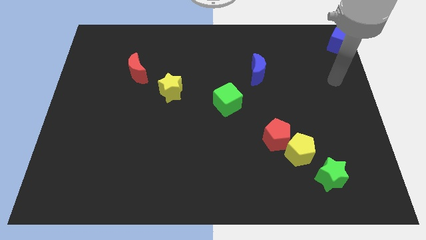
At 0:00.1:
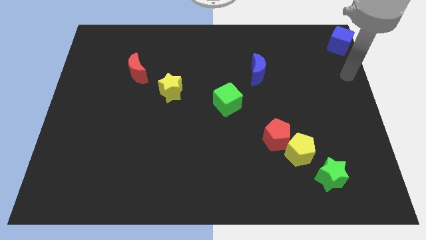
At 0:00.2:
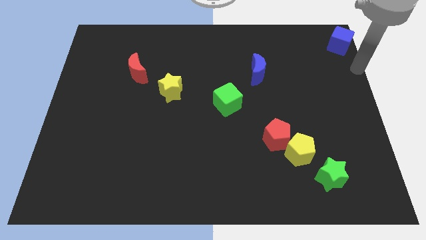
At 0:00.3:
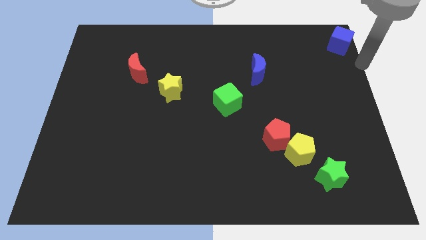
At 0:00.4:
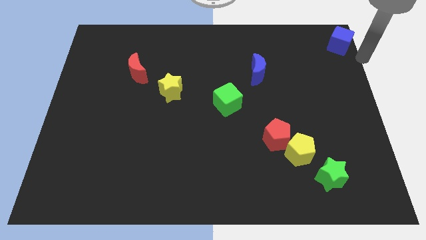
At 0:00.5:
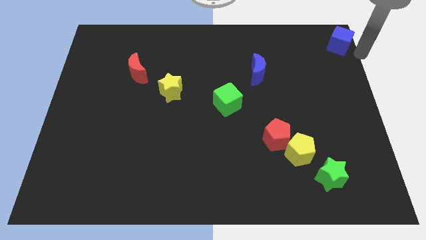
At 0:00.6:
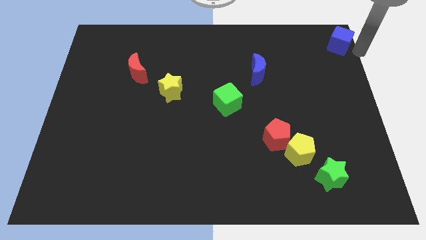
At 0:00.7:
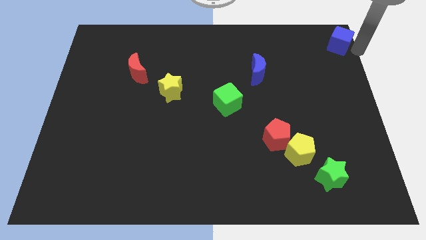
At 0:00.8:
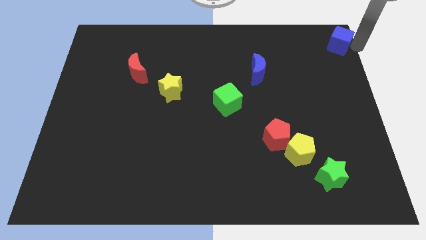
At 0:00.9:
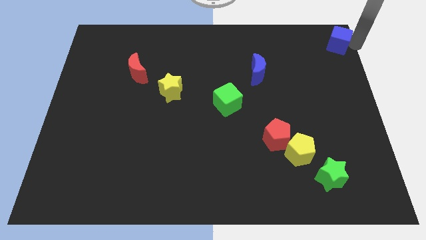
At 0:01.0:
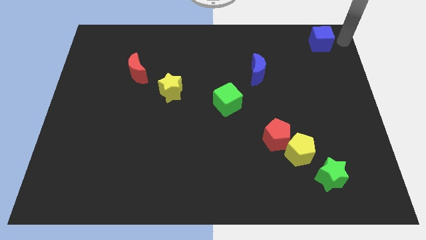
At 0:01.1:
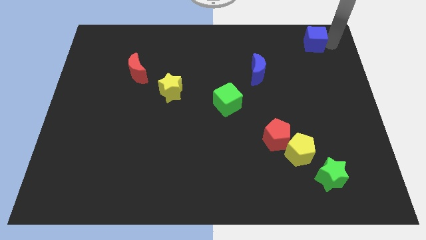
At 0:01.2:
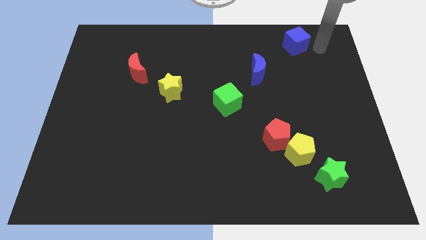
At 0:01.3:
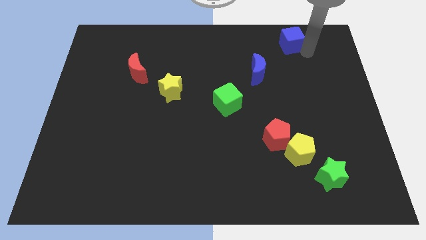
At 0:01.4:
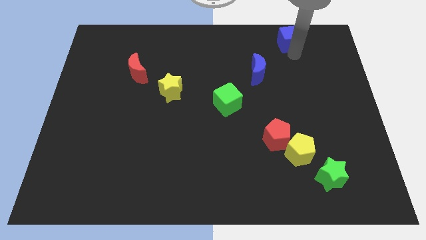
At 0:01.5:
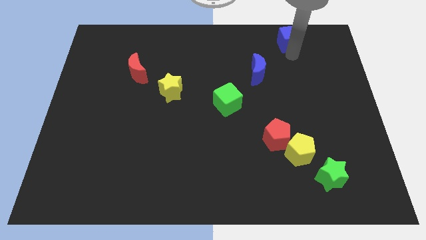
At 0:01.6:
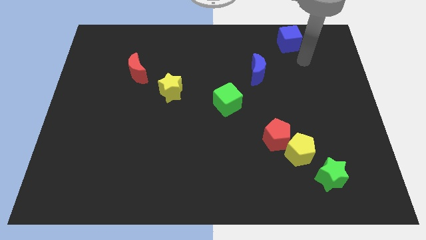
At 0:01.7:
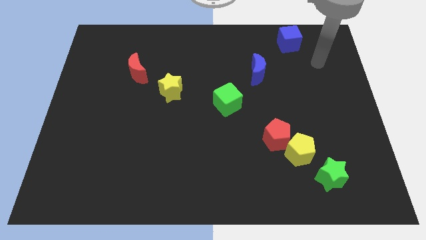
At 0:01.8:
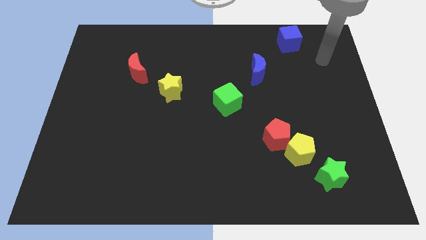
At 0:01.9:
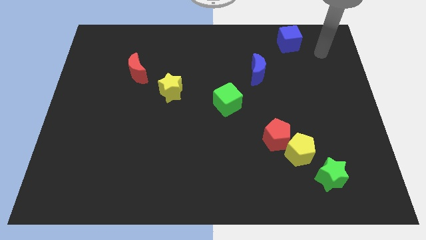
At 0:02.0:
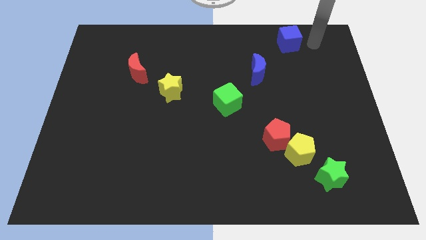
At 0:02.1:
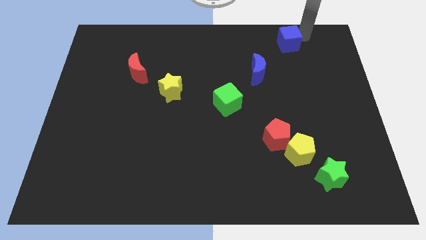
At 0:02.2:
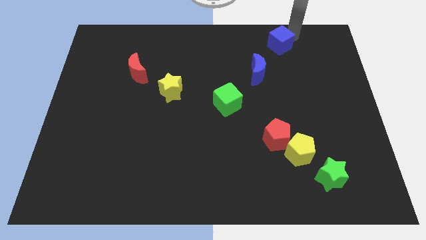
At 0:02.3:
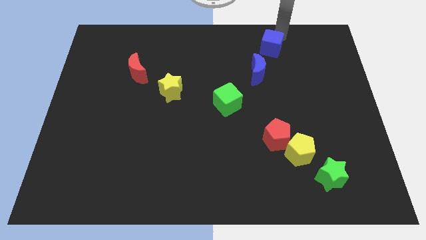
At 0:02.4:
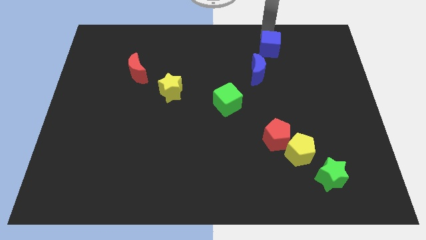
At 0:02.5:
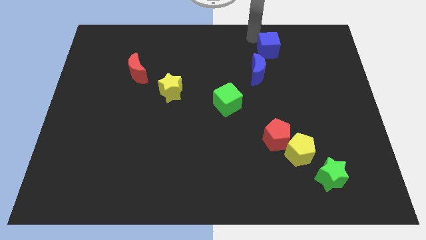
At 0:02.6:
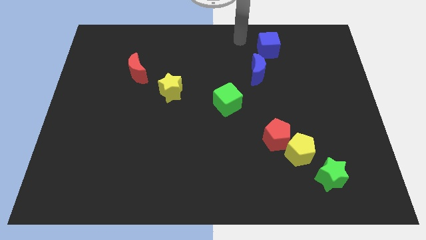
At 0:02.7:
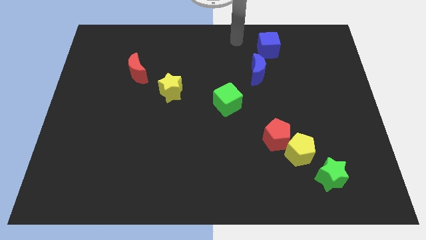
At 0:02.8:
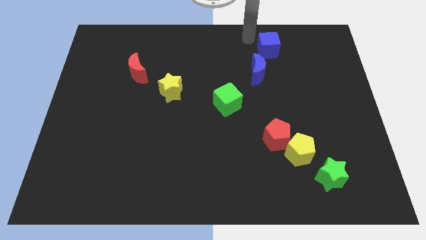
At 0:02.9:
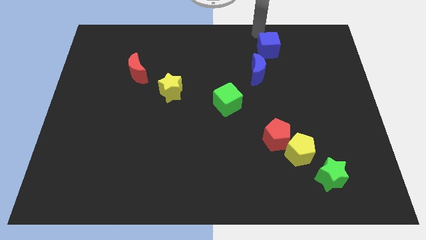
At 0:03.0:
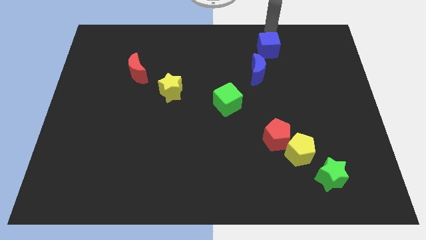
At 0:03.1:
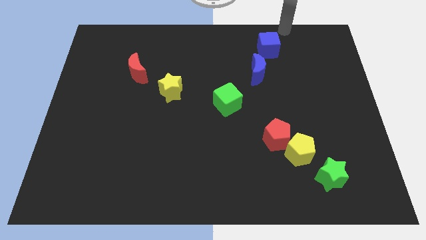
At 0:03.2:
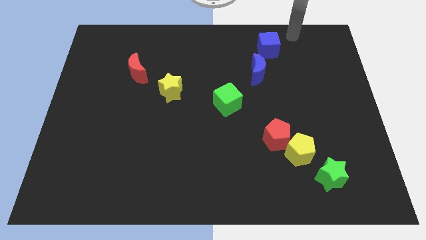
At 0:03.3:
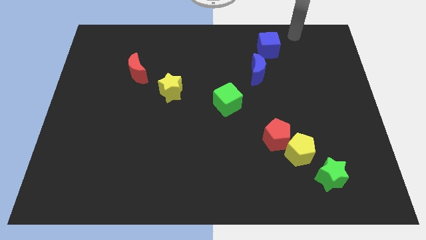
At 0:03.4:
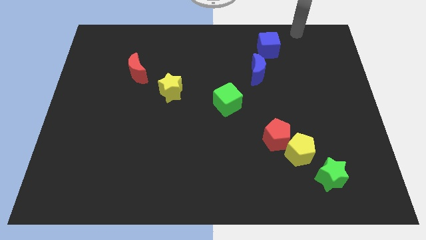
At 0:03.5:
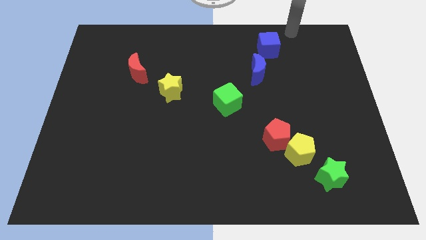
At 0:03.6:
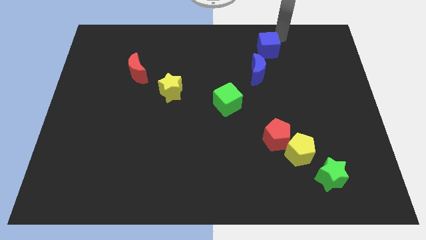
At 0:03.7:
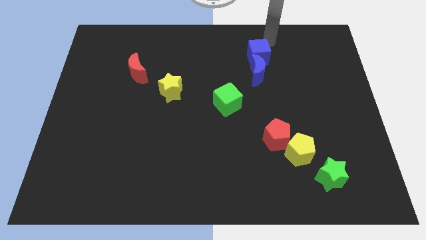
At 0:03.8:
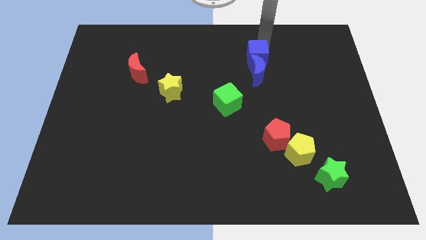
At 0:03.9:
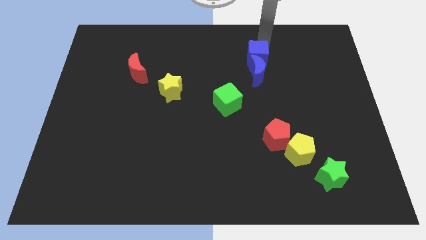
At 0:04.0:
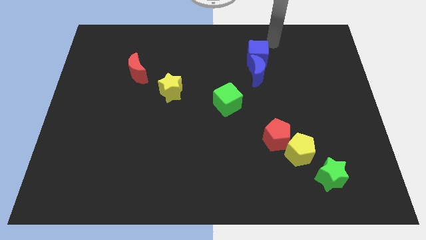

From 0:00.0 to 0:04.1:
move blue cube close to the blue moon

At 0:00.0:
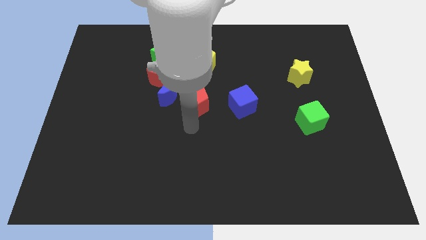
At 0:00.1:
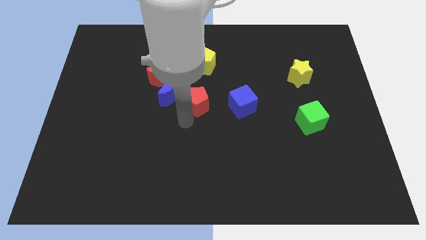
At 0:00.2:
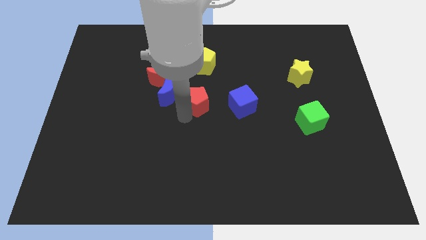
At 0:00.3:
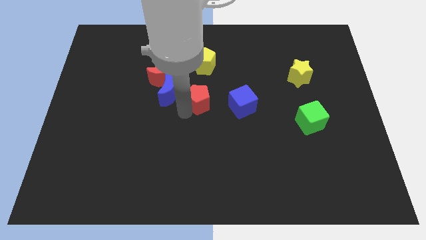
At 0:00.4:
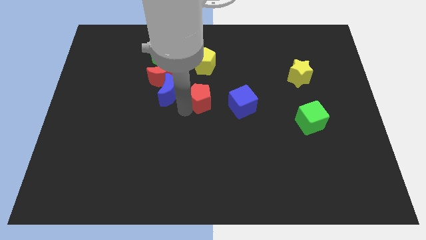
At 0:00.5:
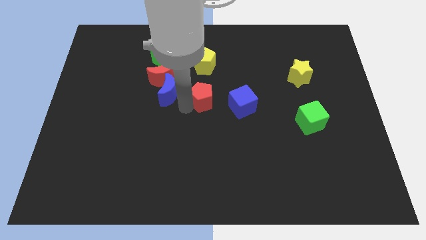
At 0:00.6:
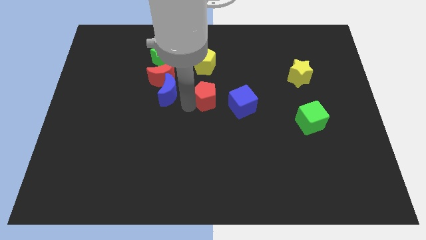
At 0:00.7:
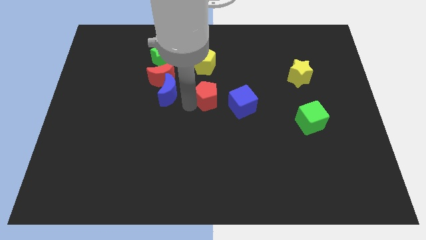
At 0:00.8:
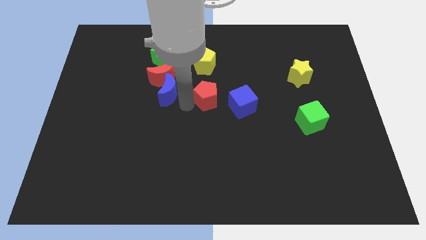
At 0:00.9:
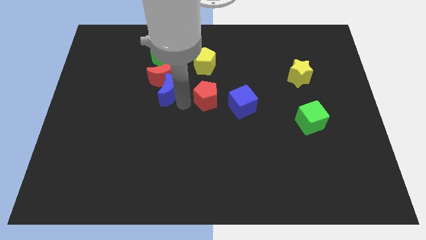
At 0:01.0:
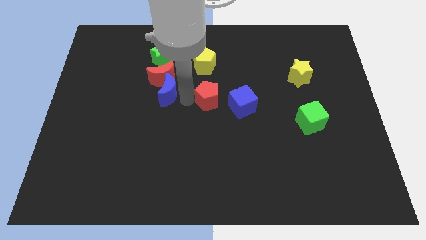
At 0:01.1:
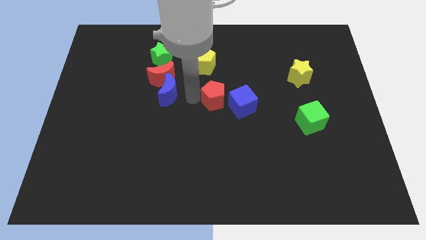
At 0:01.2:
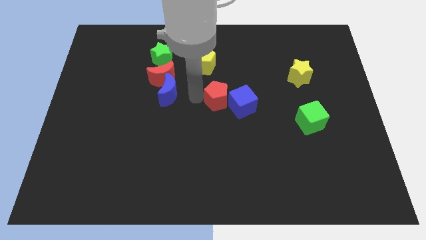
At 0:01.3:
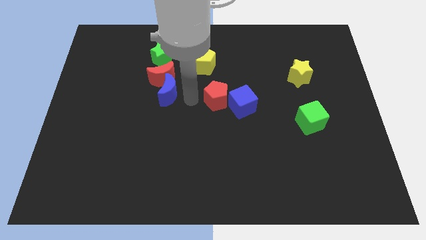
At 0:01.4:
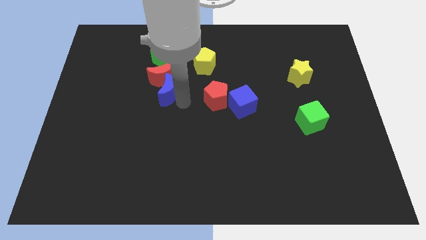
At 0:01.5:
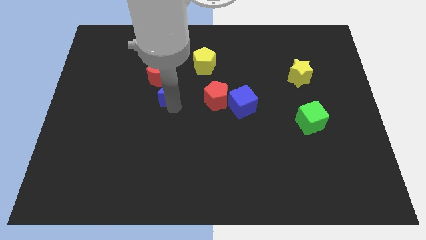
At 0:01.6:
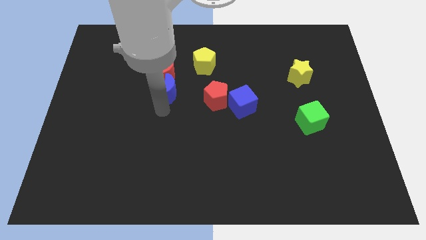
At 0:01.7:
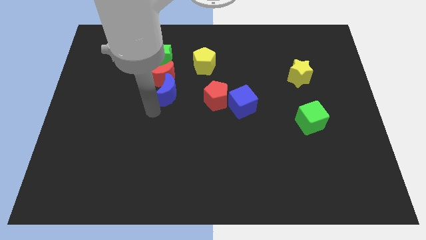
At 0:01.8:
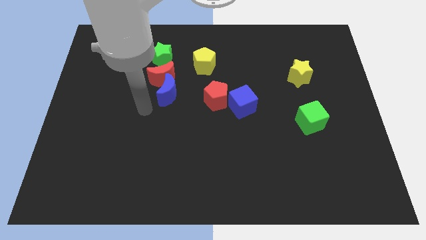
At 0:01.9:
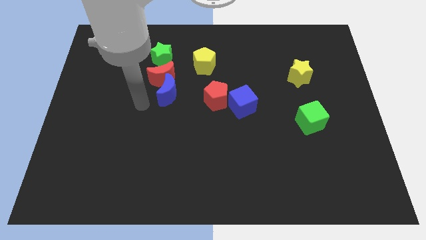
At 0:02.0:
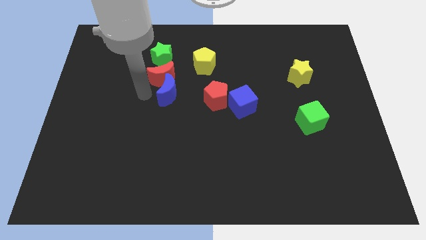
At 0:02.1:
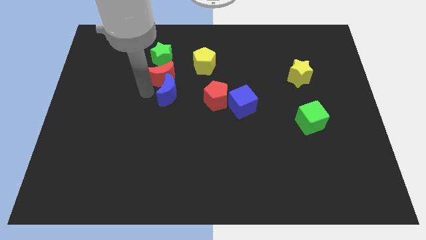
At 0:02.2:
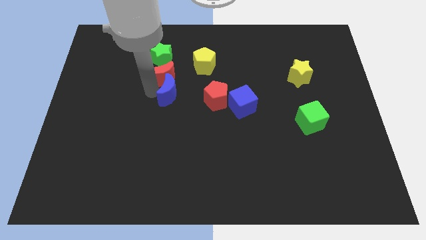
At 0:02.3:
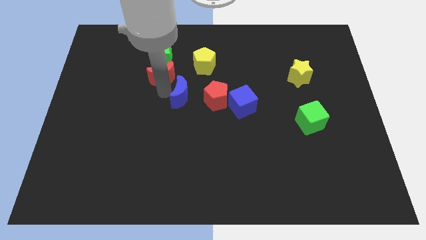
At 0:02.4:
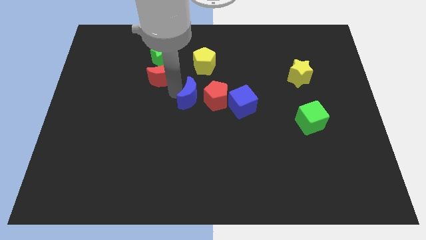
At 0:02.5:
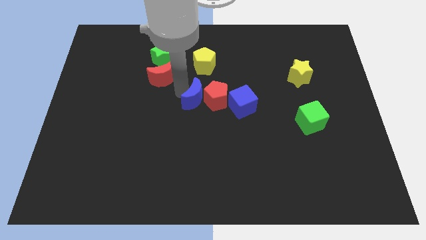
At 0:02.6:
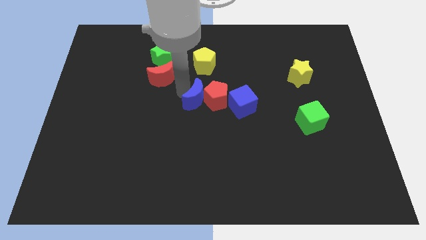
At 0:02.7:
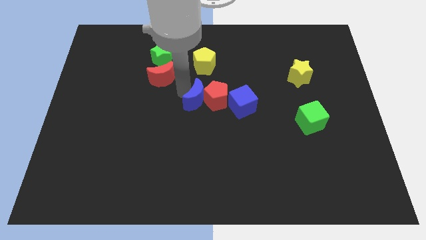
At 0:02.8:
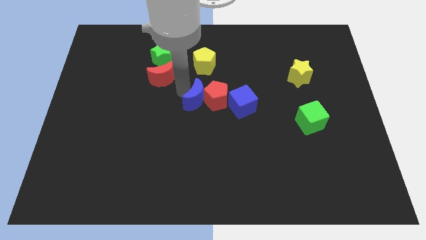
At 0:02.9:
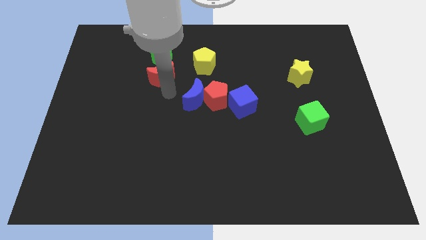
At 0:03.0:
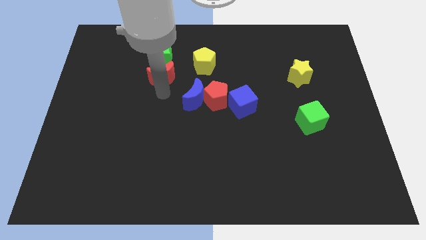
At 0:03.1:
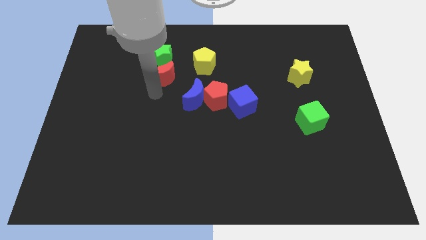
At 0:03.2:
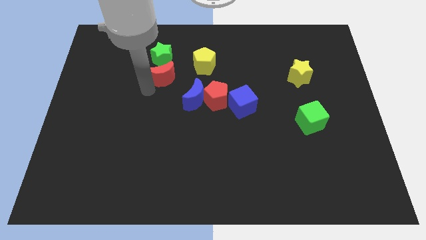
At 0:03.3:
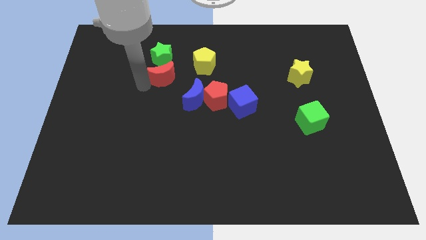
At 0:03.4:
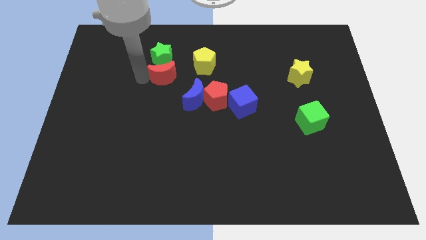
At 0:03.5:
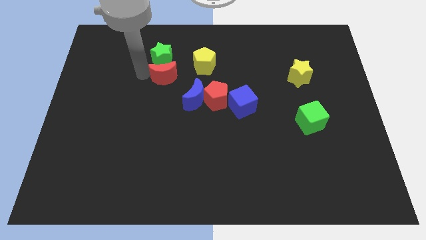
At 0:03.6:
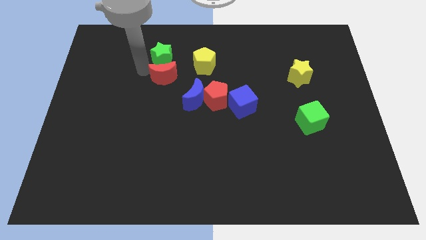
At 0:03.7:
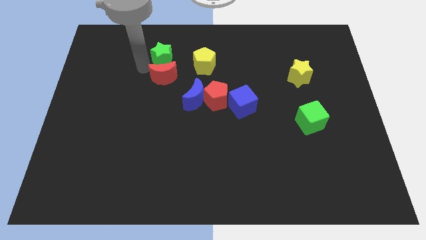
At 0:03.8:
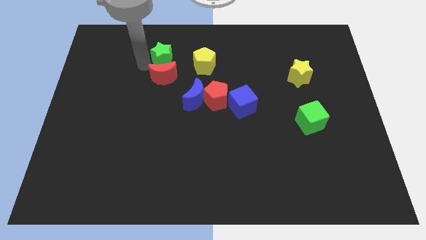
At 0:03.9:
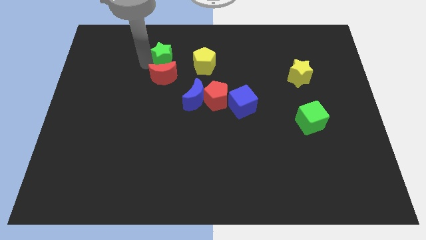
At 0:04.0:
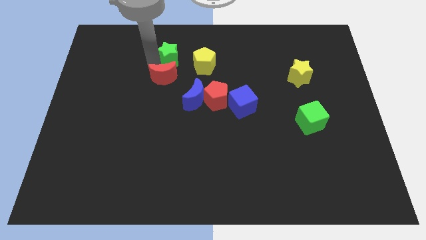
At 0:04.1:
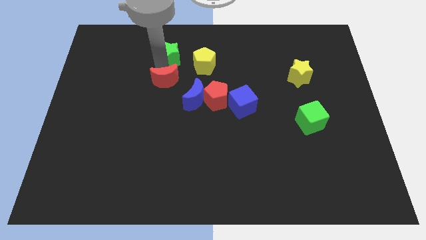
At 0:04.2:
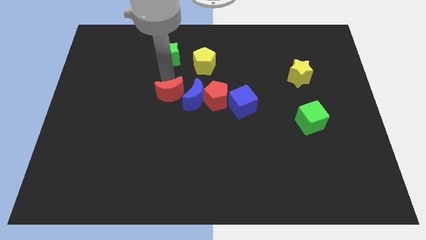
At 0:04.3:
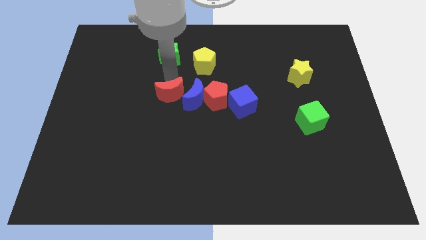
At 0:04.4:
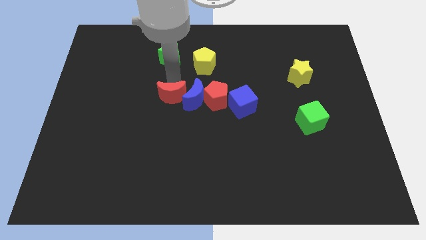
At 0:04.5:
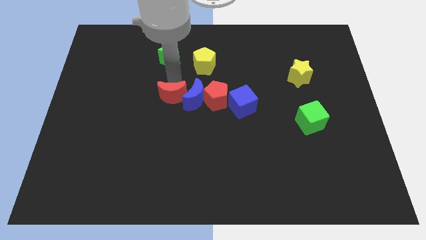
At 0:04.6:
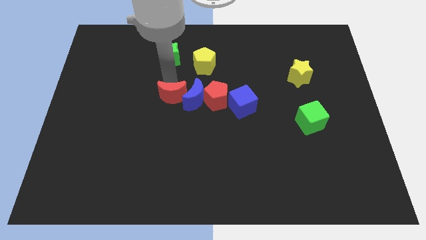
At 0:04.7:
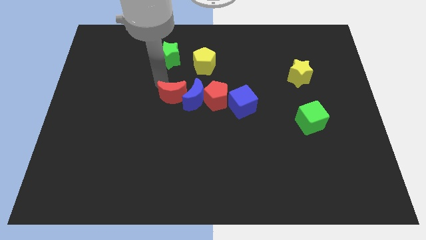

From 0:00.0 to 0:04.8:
place red and blue blocks in a horizontal line
